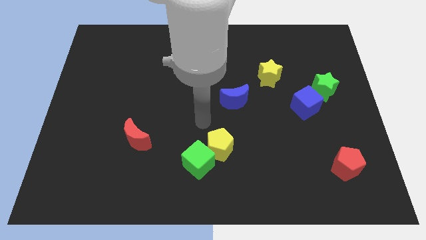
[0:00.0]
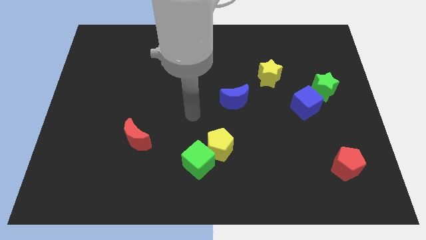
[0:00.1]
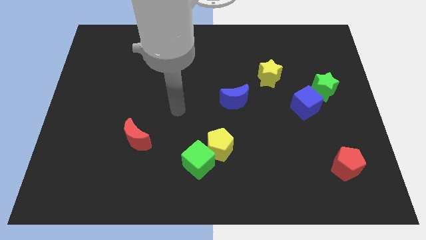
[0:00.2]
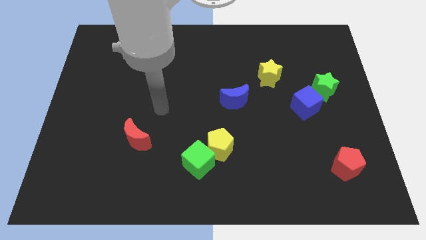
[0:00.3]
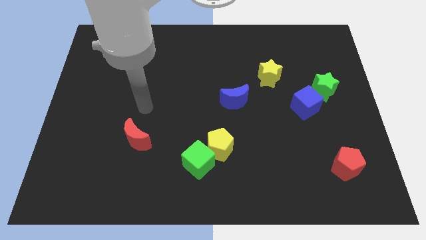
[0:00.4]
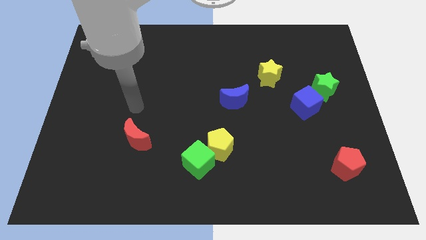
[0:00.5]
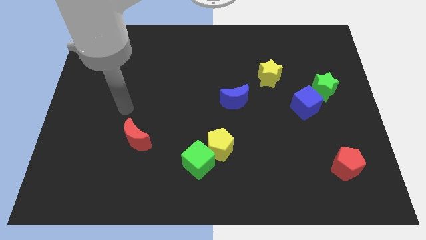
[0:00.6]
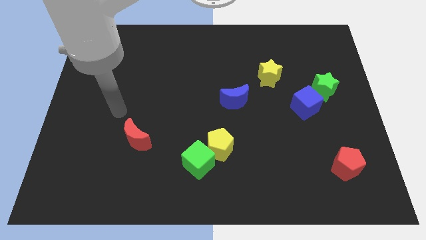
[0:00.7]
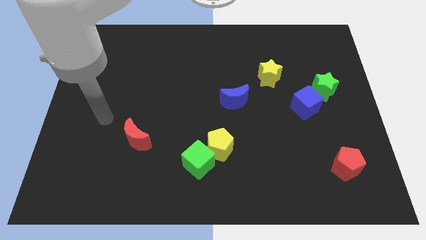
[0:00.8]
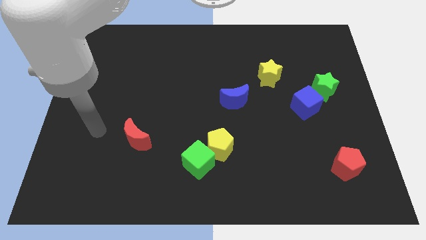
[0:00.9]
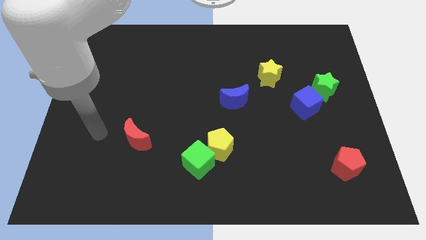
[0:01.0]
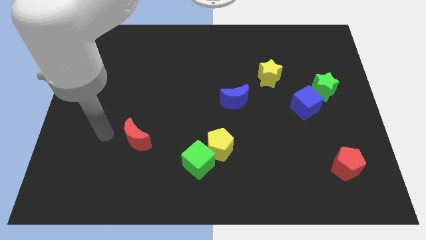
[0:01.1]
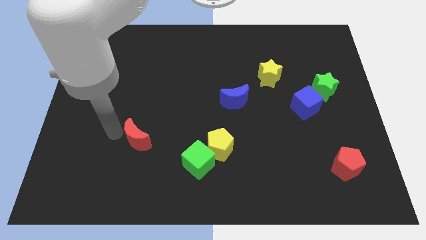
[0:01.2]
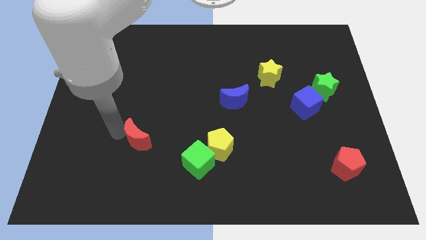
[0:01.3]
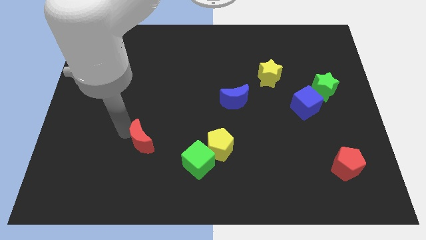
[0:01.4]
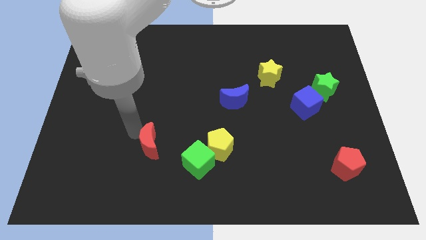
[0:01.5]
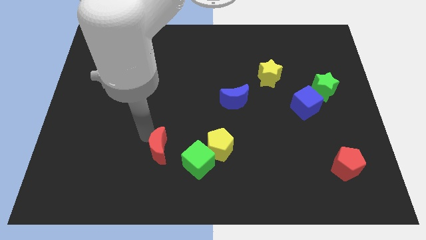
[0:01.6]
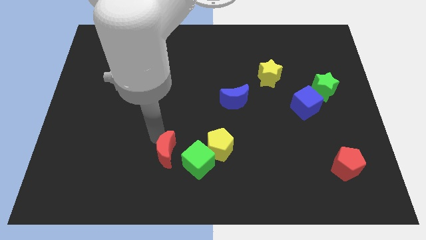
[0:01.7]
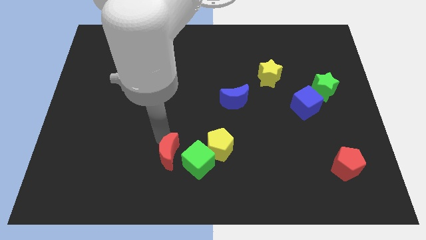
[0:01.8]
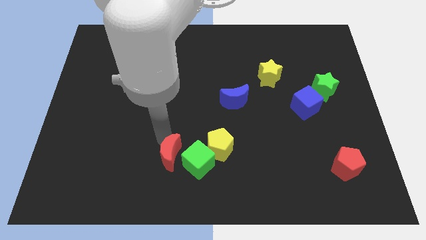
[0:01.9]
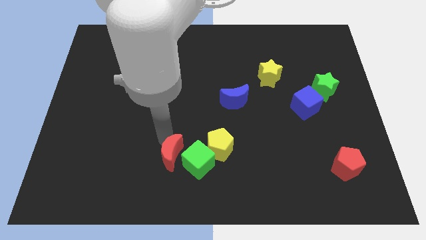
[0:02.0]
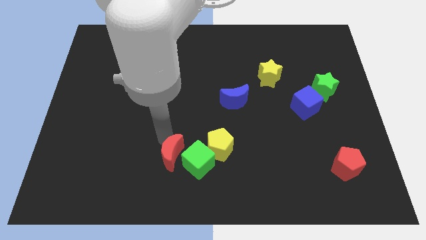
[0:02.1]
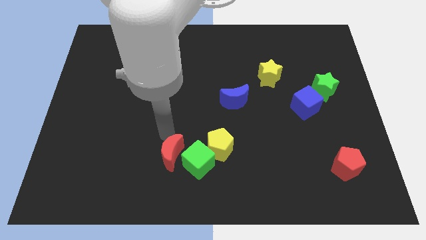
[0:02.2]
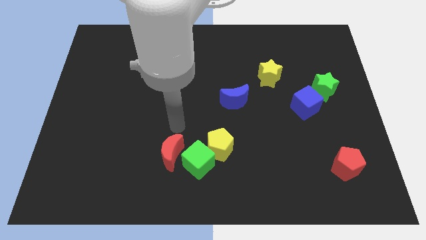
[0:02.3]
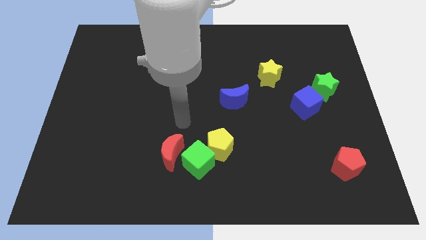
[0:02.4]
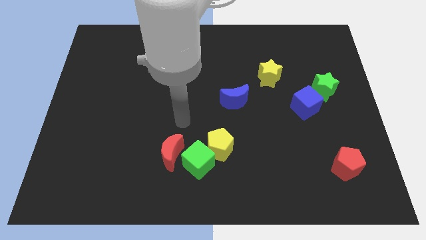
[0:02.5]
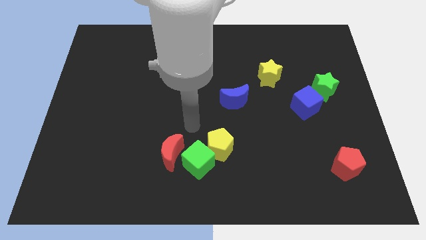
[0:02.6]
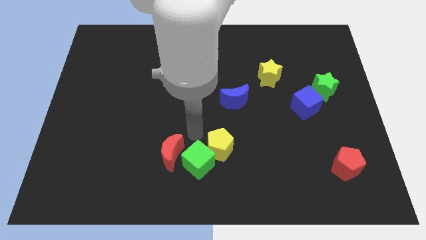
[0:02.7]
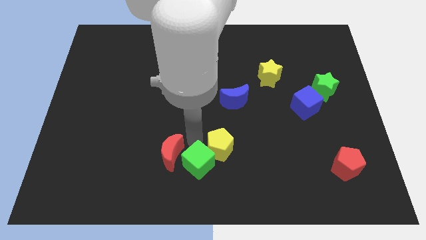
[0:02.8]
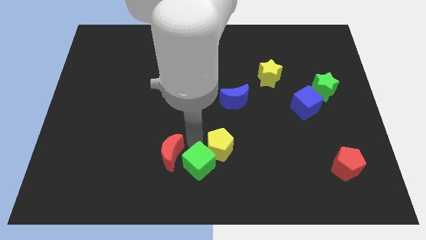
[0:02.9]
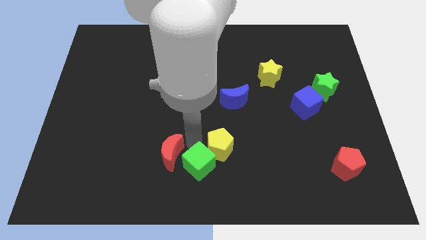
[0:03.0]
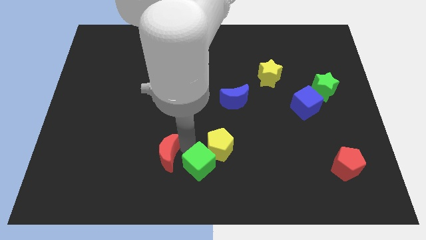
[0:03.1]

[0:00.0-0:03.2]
move the red crescent to the left of the green cube

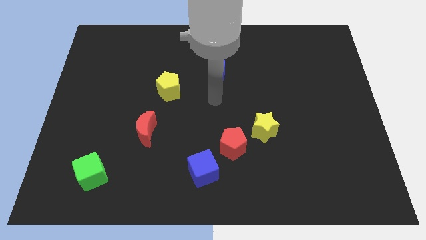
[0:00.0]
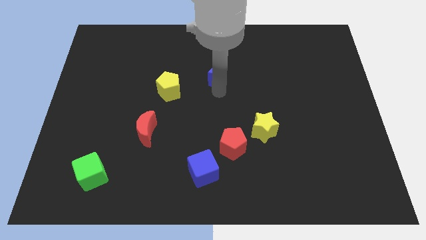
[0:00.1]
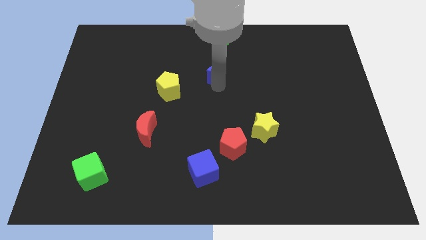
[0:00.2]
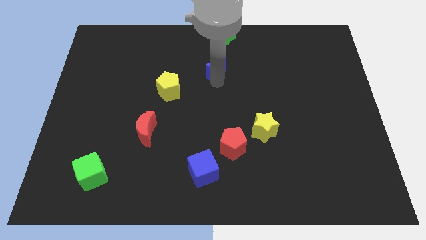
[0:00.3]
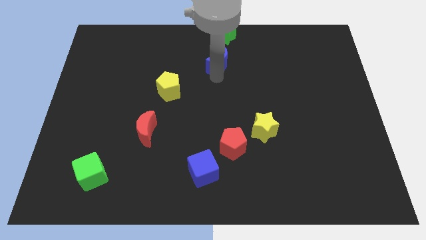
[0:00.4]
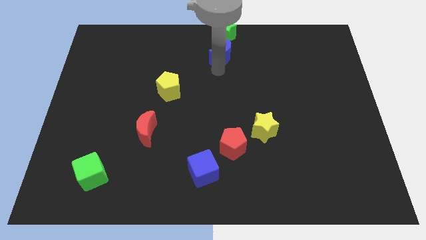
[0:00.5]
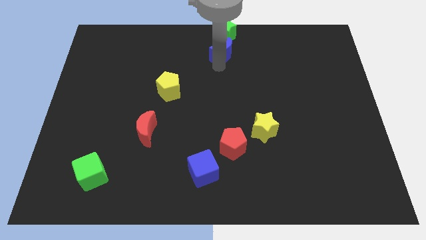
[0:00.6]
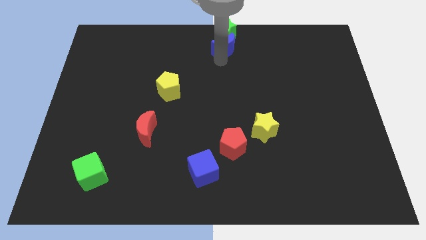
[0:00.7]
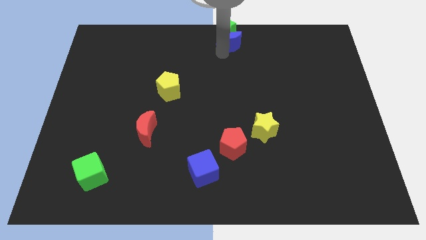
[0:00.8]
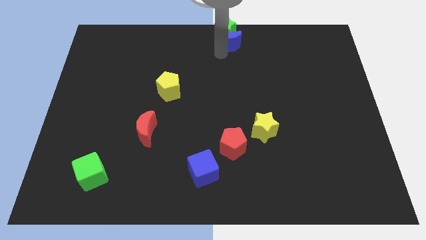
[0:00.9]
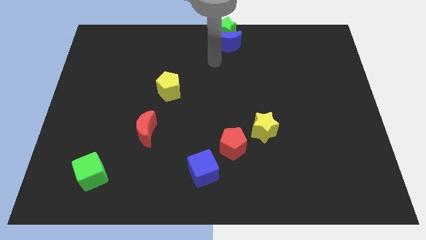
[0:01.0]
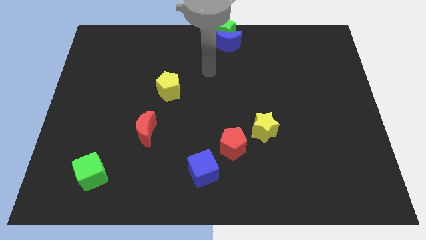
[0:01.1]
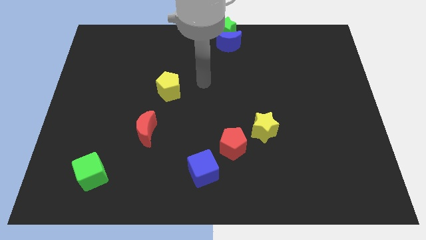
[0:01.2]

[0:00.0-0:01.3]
move the blue moon vertically below the green star

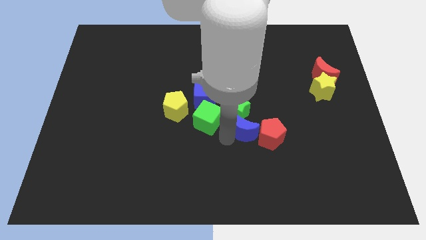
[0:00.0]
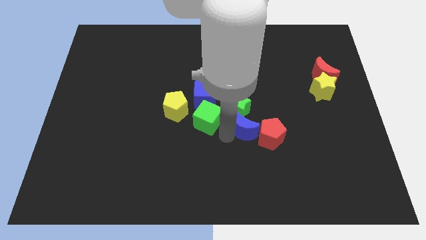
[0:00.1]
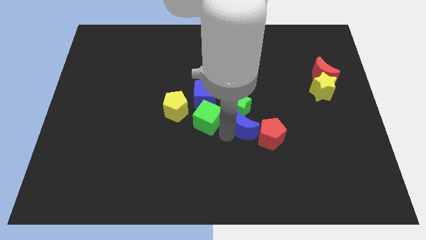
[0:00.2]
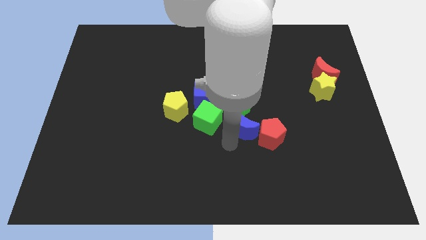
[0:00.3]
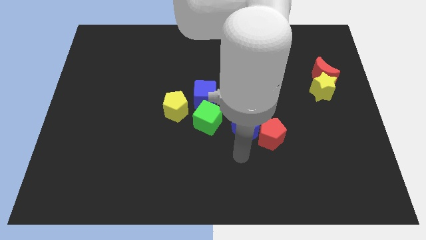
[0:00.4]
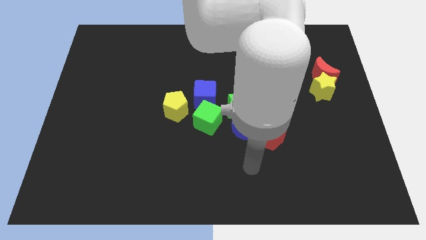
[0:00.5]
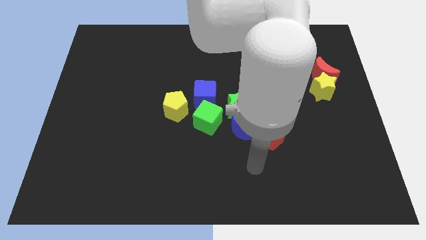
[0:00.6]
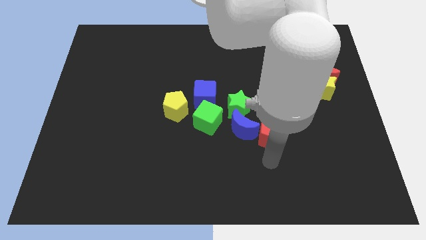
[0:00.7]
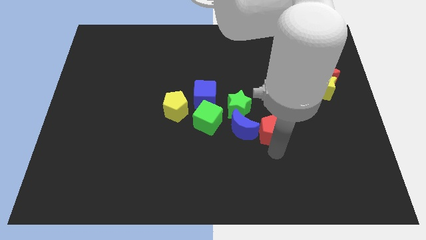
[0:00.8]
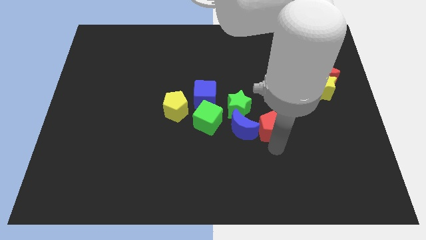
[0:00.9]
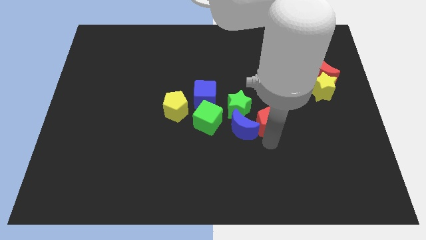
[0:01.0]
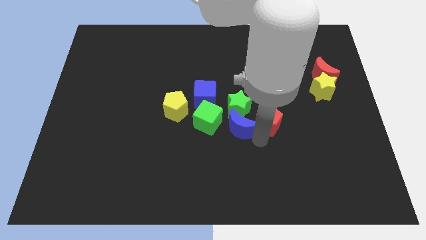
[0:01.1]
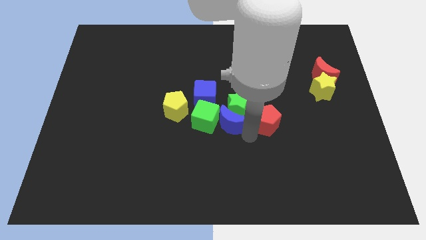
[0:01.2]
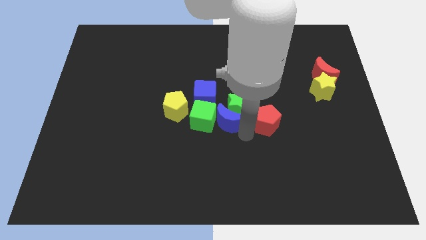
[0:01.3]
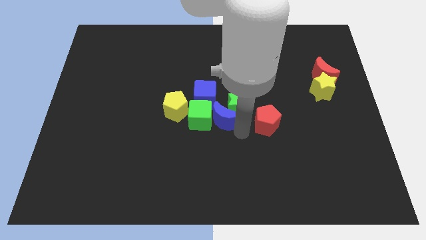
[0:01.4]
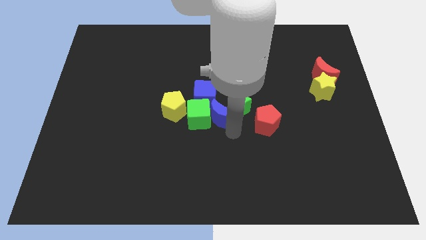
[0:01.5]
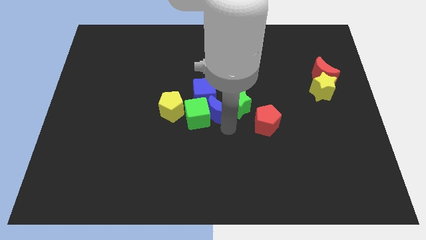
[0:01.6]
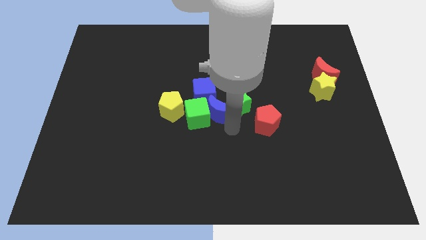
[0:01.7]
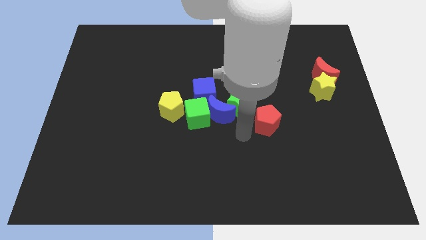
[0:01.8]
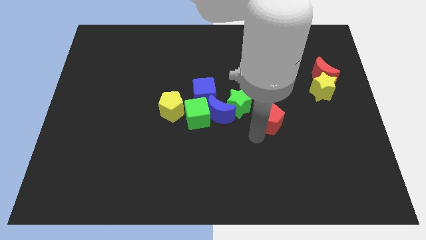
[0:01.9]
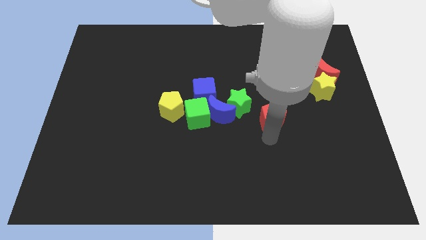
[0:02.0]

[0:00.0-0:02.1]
push the blue crescent between green blocks

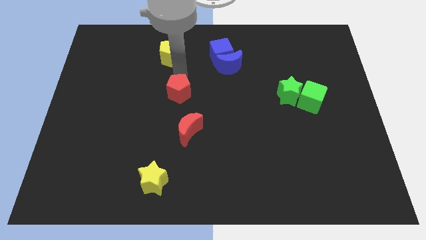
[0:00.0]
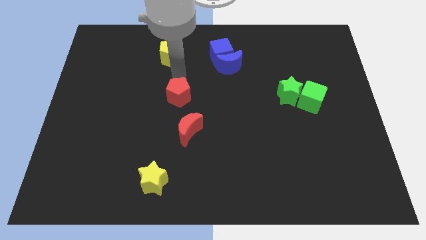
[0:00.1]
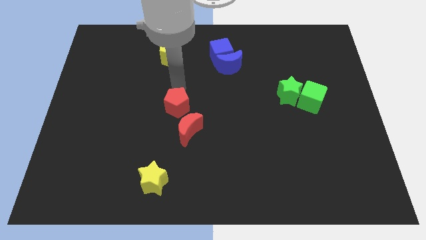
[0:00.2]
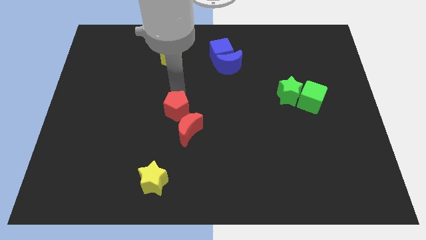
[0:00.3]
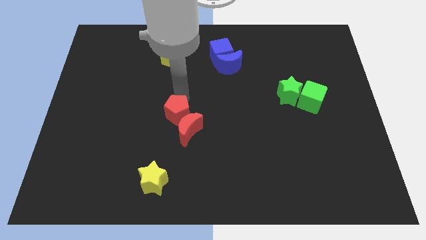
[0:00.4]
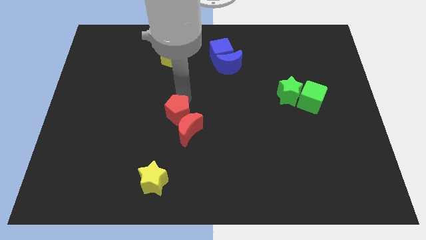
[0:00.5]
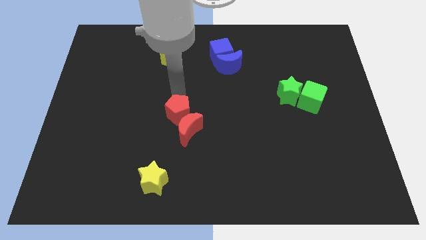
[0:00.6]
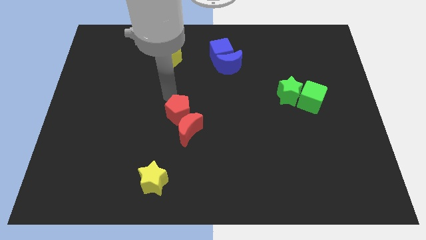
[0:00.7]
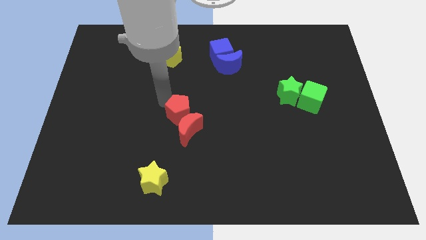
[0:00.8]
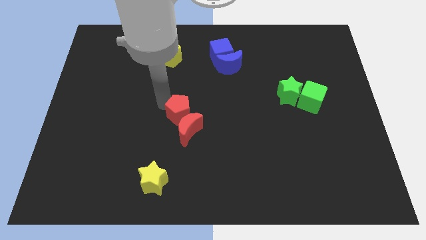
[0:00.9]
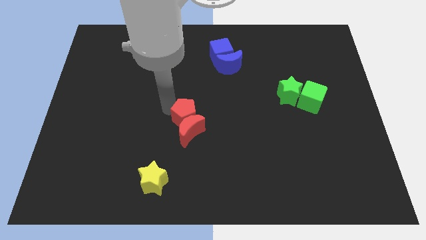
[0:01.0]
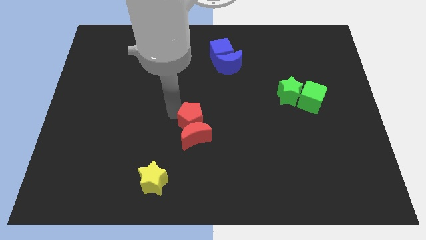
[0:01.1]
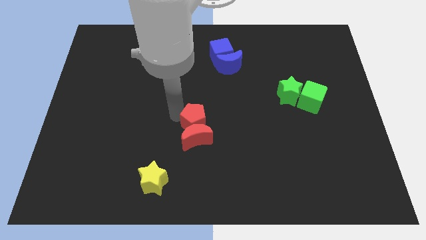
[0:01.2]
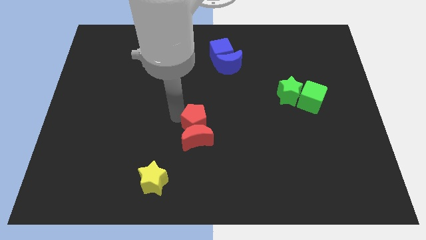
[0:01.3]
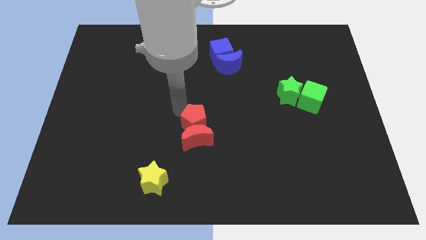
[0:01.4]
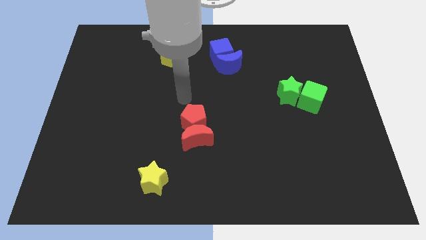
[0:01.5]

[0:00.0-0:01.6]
push the red pentagon into the top of the red crescent

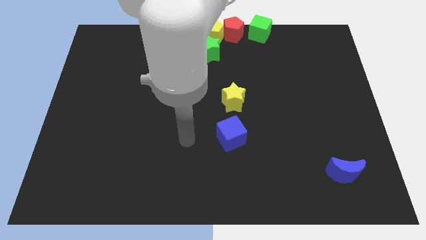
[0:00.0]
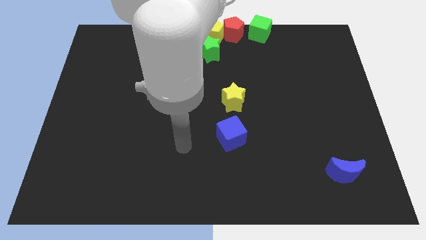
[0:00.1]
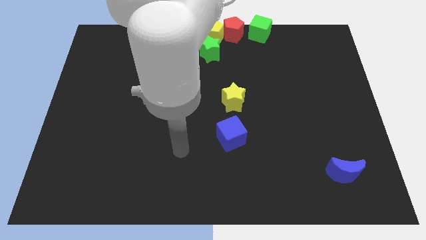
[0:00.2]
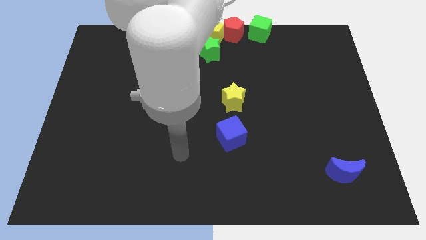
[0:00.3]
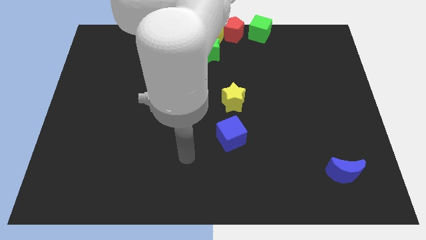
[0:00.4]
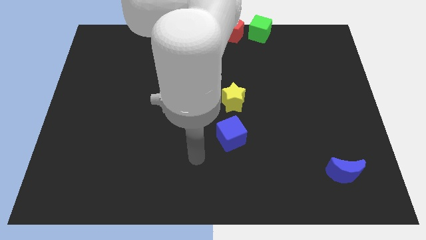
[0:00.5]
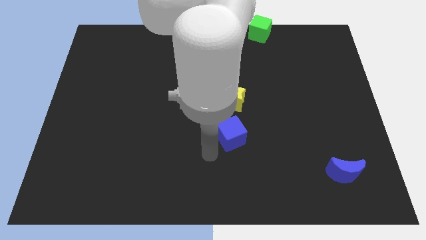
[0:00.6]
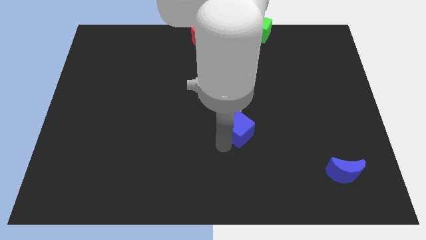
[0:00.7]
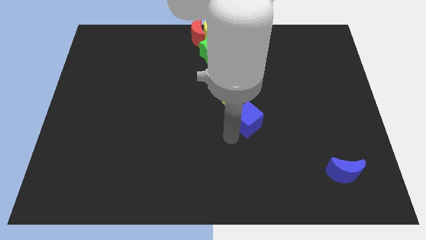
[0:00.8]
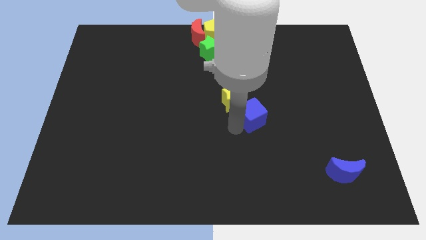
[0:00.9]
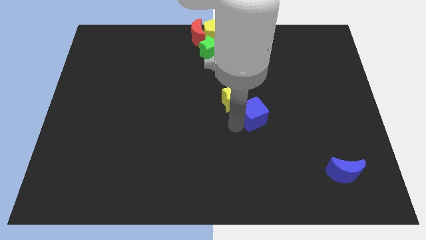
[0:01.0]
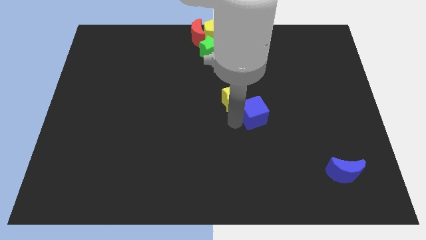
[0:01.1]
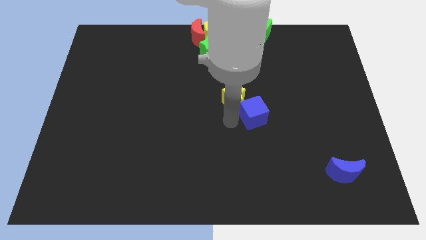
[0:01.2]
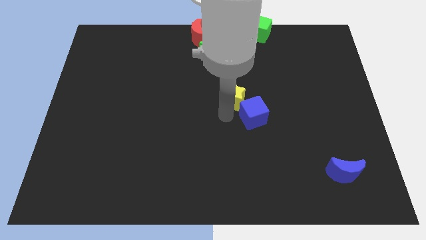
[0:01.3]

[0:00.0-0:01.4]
move blue cube to the bottom right of the yellow star
